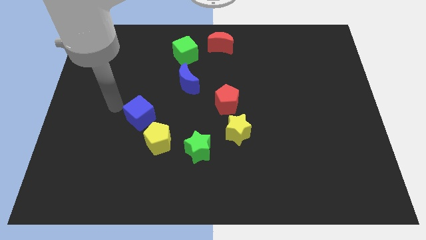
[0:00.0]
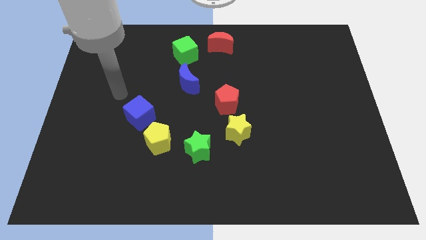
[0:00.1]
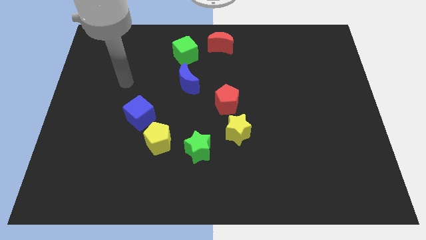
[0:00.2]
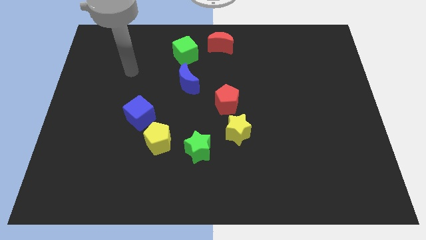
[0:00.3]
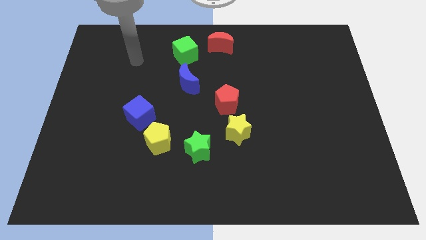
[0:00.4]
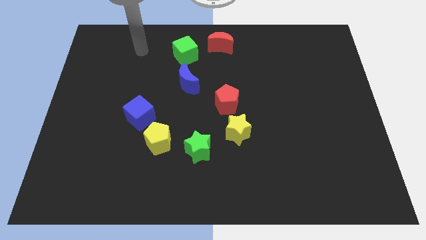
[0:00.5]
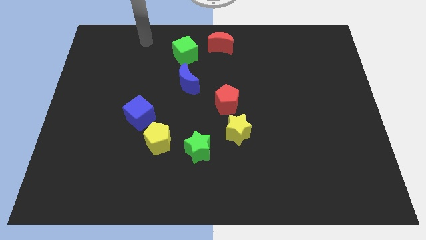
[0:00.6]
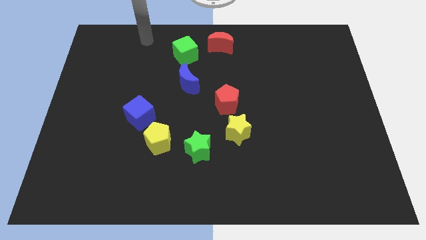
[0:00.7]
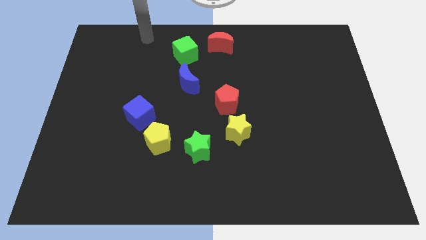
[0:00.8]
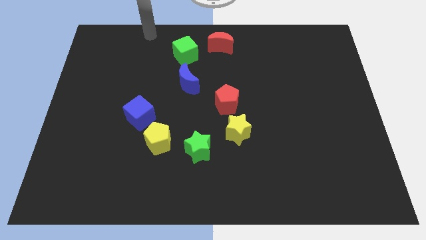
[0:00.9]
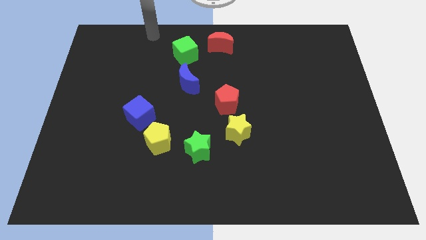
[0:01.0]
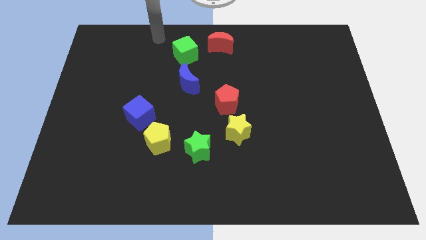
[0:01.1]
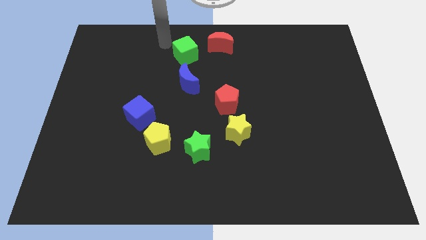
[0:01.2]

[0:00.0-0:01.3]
move your arm away from the blue cube

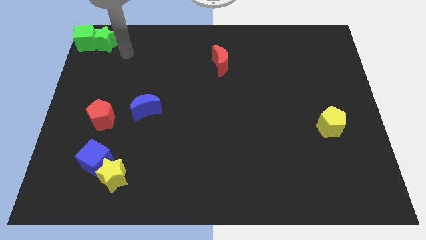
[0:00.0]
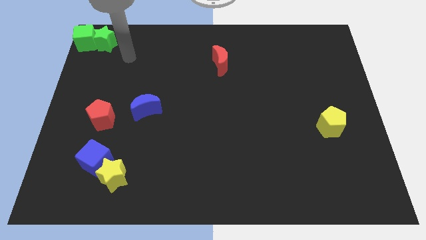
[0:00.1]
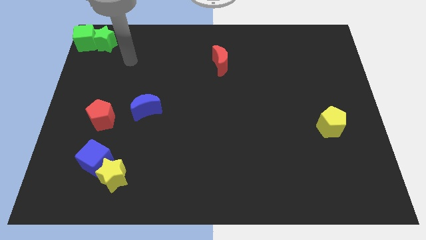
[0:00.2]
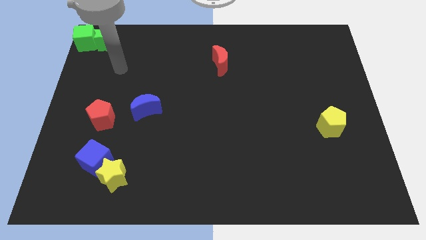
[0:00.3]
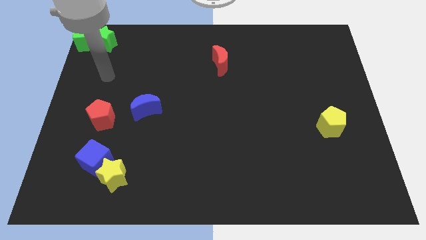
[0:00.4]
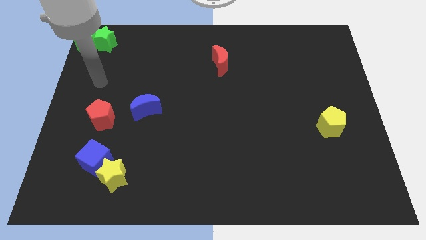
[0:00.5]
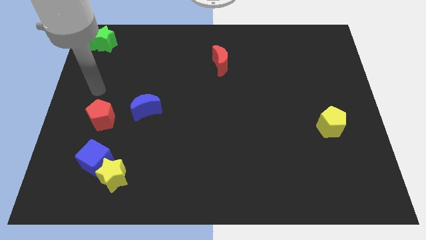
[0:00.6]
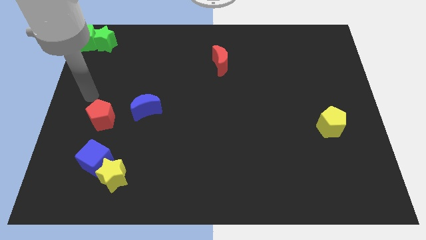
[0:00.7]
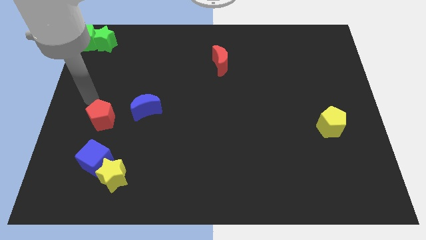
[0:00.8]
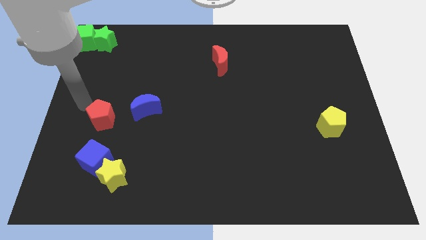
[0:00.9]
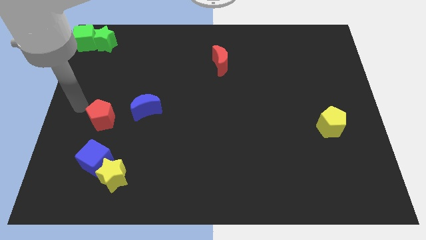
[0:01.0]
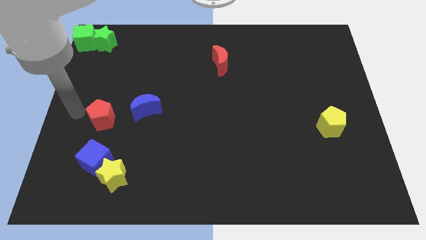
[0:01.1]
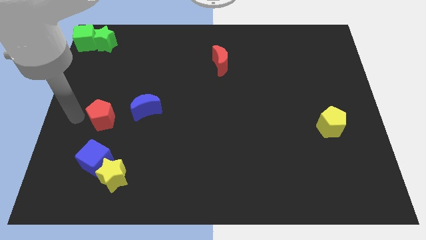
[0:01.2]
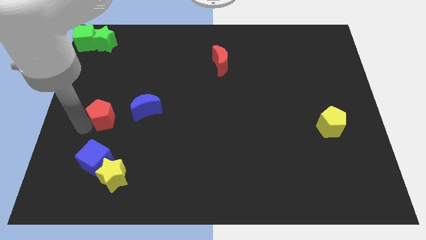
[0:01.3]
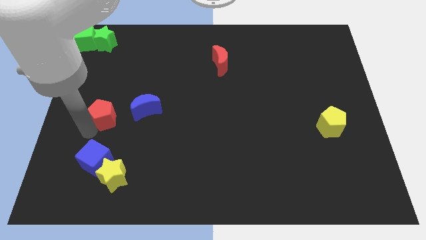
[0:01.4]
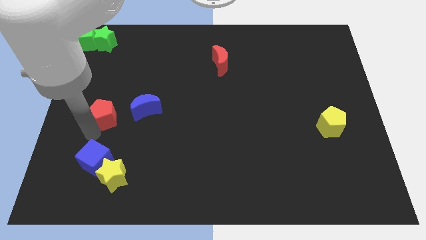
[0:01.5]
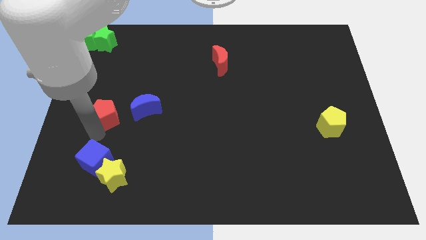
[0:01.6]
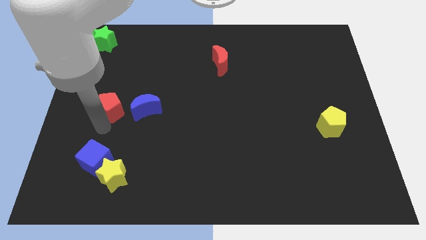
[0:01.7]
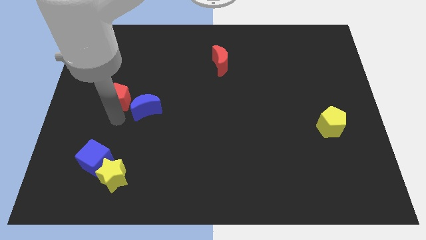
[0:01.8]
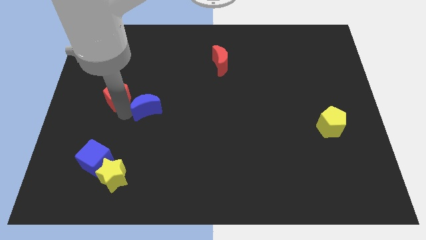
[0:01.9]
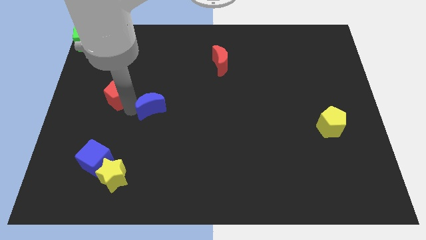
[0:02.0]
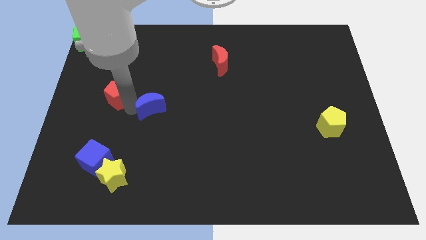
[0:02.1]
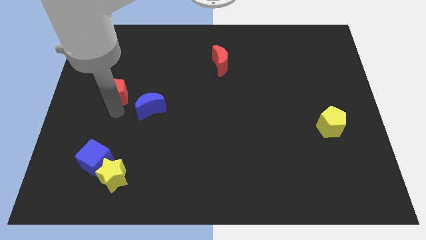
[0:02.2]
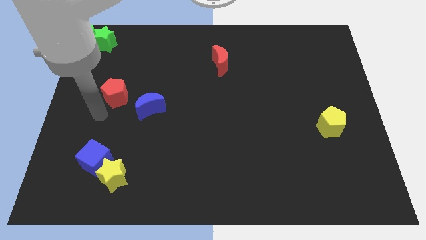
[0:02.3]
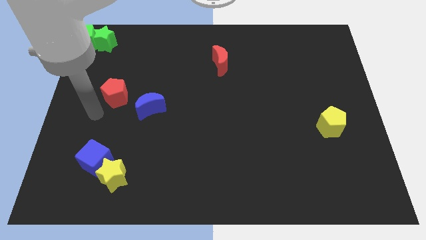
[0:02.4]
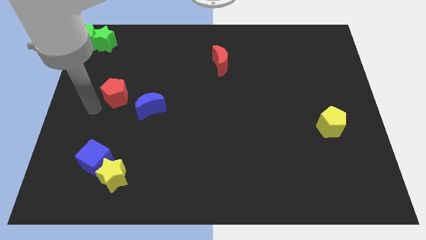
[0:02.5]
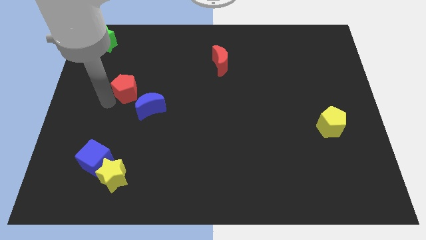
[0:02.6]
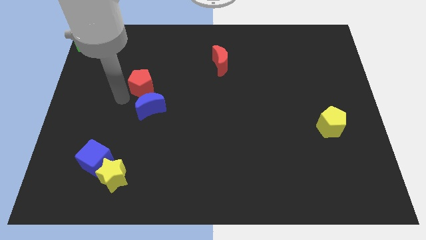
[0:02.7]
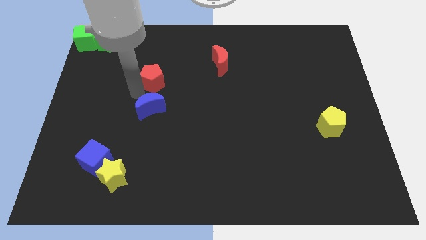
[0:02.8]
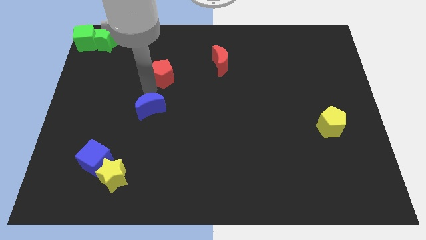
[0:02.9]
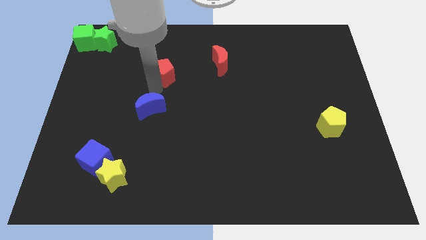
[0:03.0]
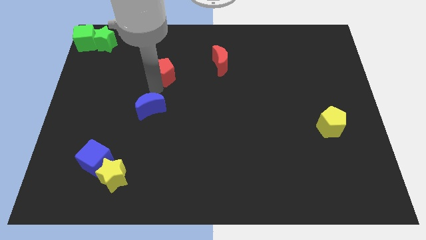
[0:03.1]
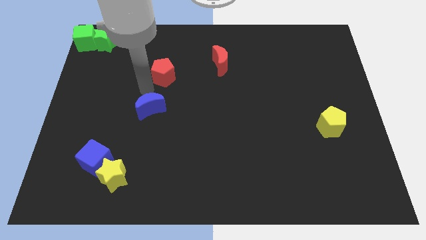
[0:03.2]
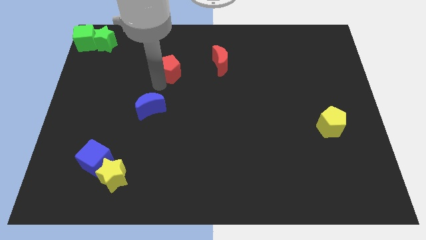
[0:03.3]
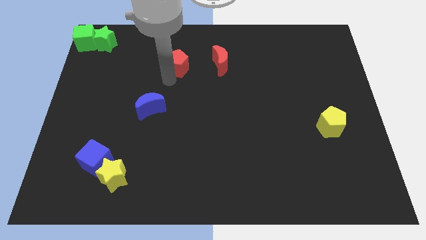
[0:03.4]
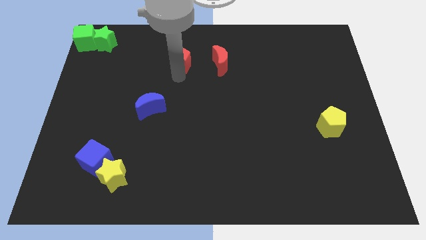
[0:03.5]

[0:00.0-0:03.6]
slide the red pentagon to the left of the red moon

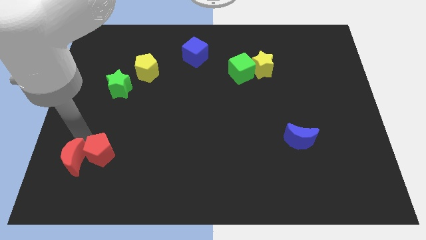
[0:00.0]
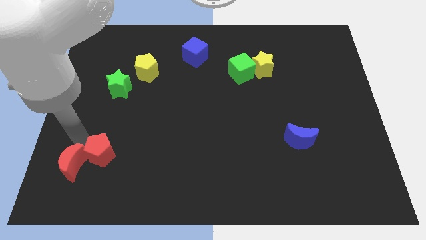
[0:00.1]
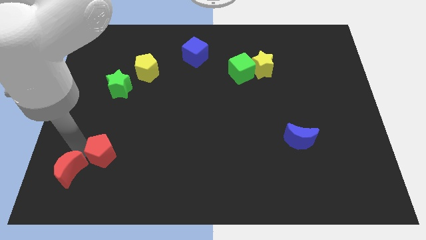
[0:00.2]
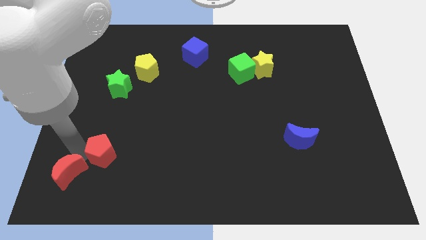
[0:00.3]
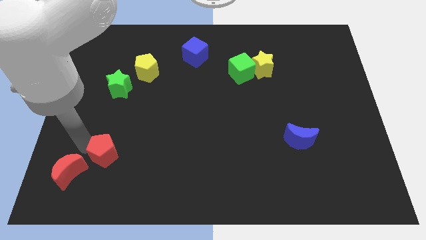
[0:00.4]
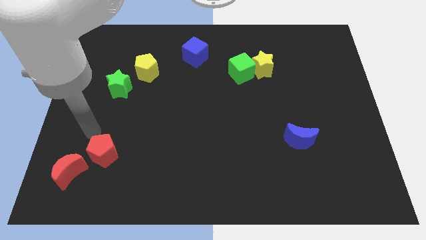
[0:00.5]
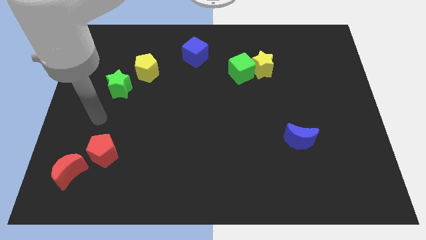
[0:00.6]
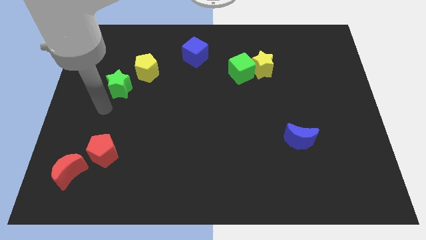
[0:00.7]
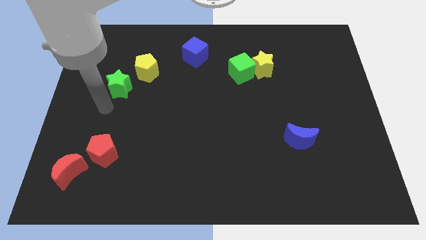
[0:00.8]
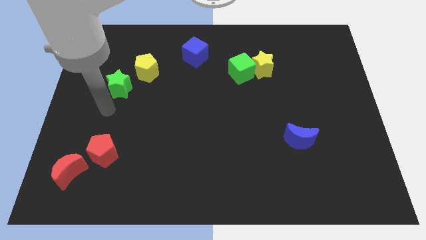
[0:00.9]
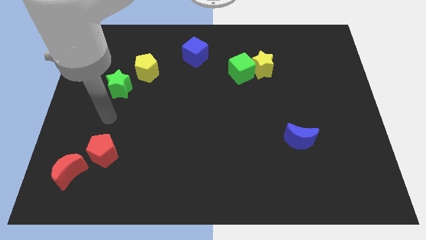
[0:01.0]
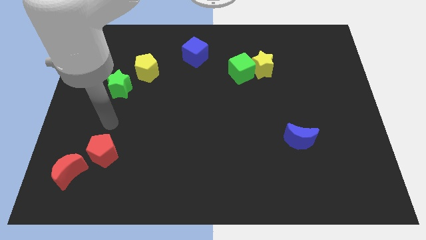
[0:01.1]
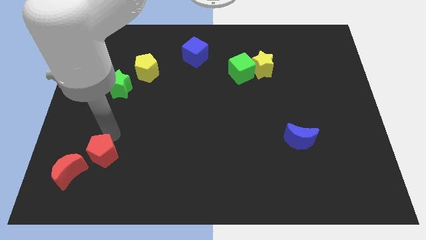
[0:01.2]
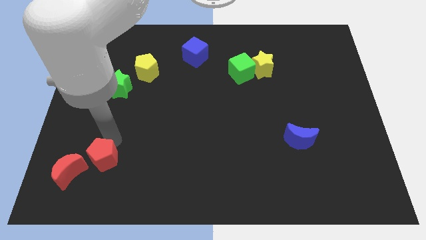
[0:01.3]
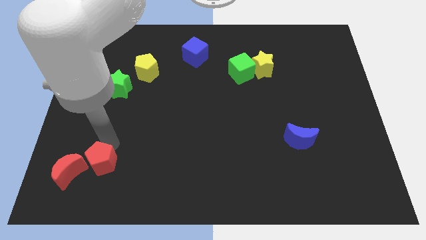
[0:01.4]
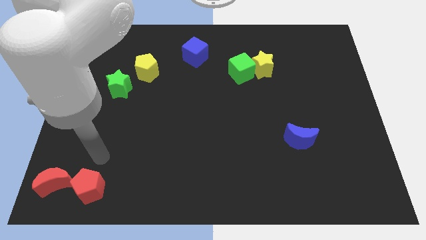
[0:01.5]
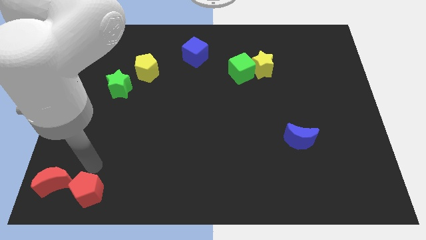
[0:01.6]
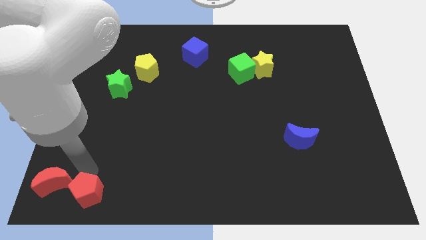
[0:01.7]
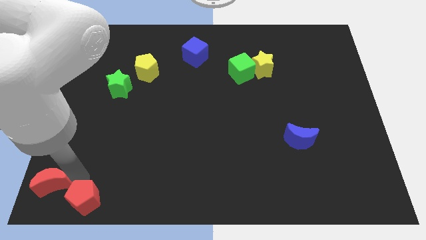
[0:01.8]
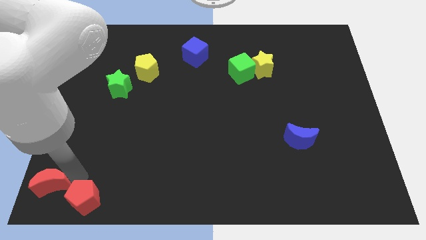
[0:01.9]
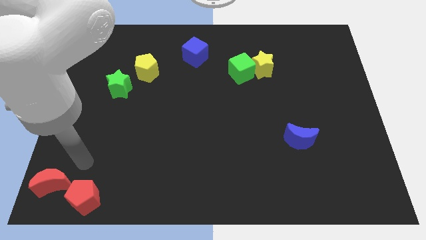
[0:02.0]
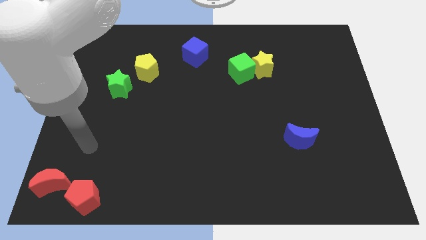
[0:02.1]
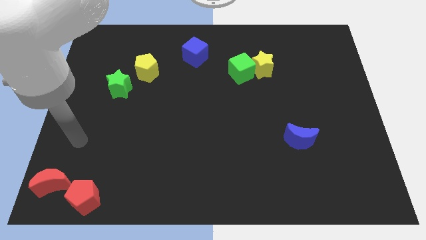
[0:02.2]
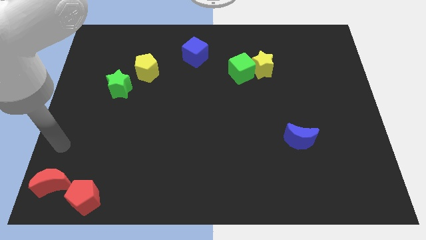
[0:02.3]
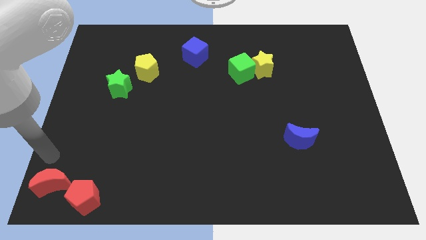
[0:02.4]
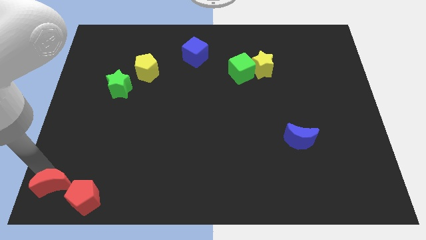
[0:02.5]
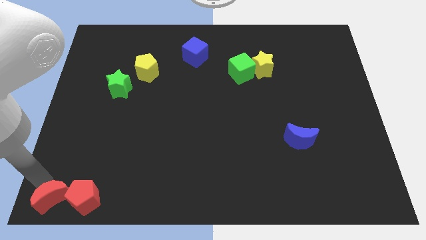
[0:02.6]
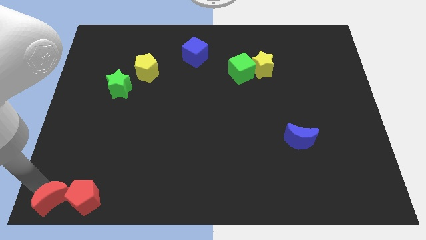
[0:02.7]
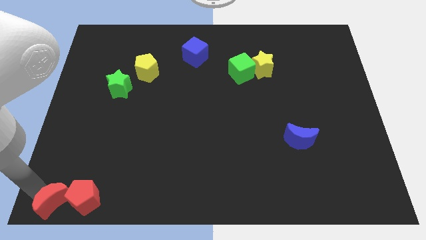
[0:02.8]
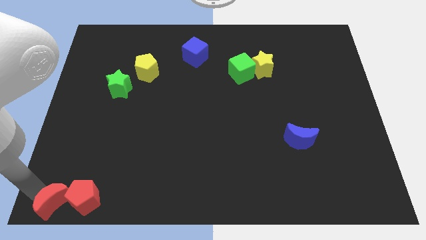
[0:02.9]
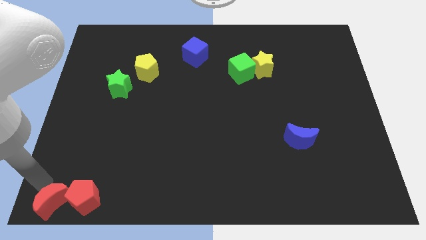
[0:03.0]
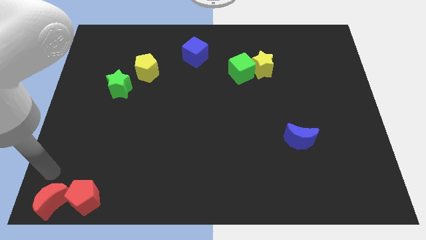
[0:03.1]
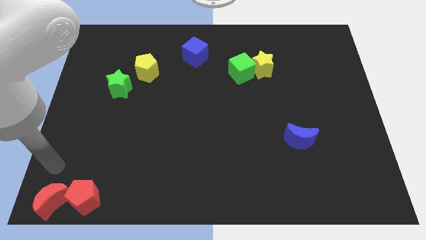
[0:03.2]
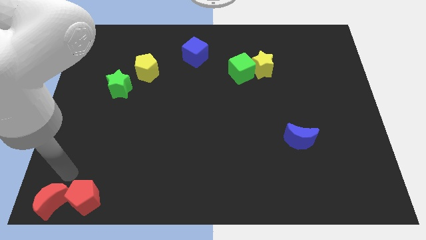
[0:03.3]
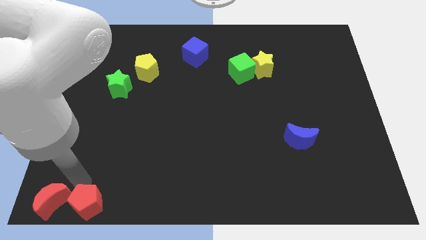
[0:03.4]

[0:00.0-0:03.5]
move the red blocks to the bottom left

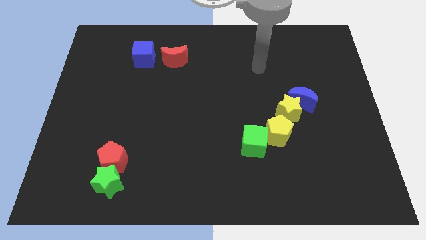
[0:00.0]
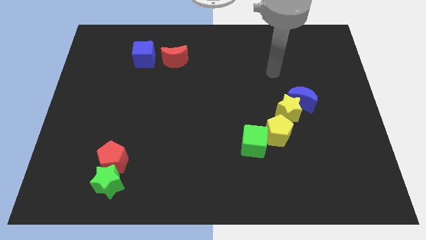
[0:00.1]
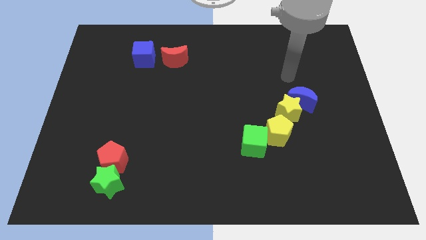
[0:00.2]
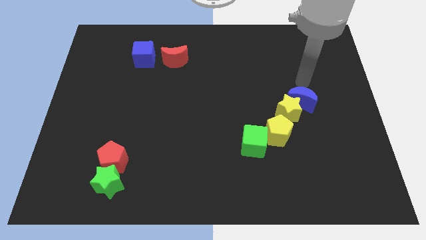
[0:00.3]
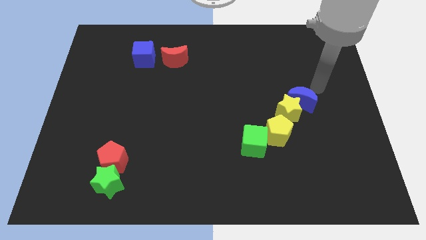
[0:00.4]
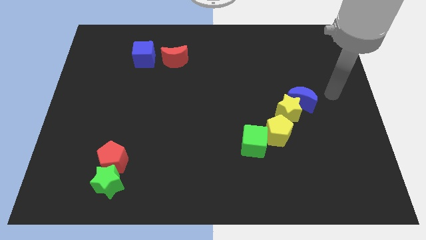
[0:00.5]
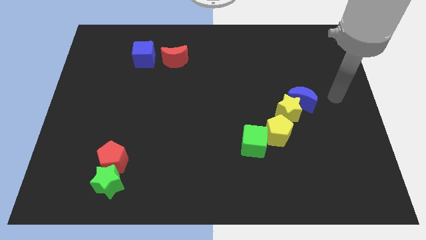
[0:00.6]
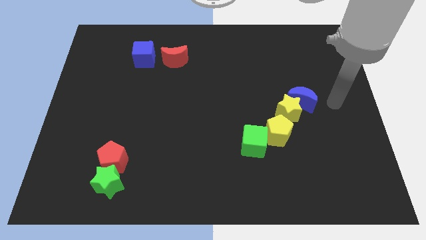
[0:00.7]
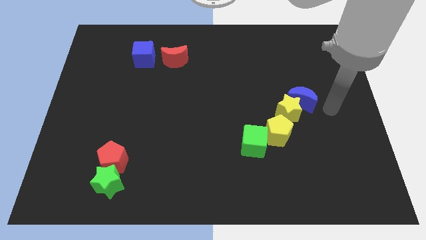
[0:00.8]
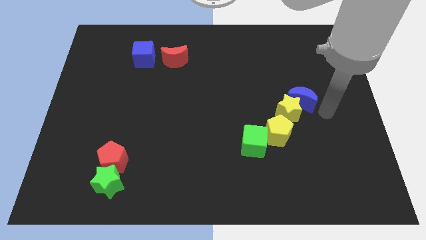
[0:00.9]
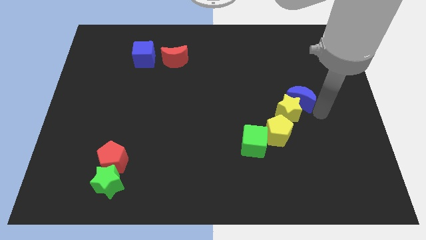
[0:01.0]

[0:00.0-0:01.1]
put arm on the right side of blue moon
